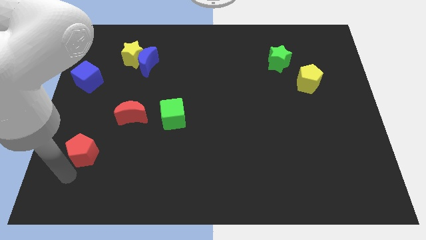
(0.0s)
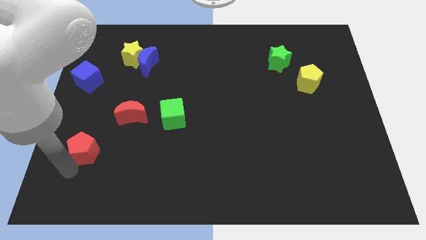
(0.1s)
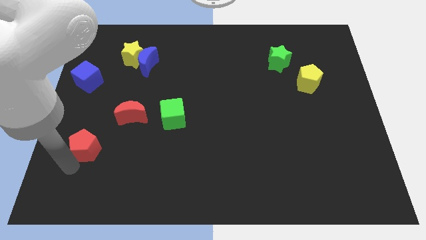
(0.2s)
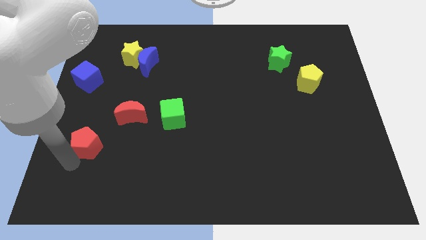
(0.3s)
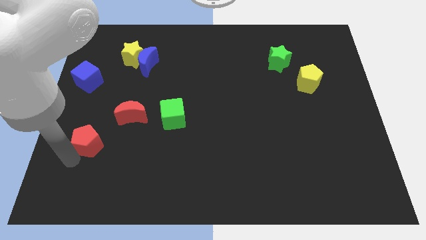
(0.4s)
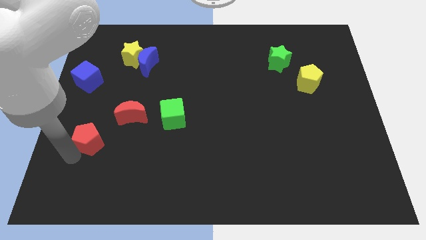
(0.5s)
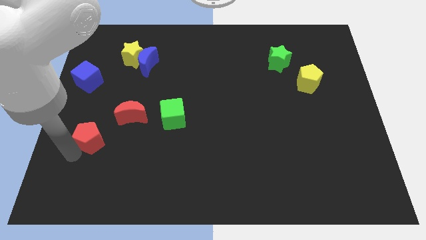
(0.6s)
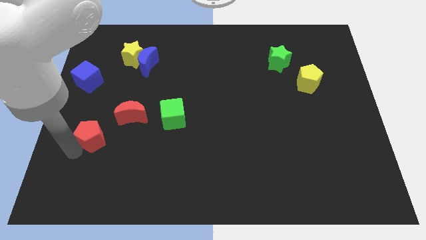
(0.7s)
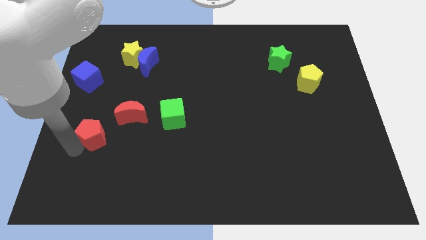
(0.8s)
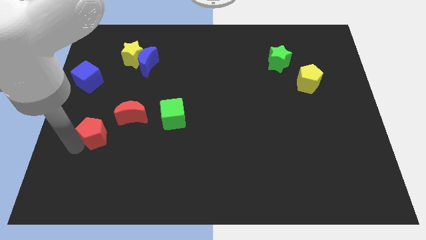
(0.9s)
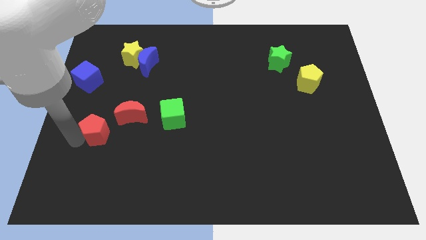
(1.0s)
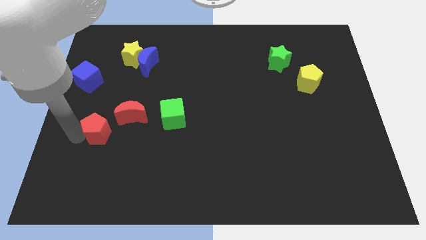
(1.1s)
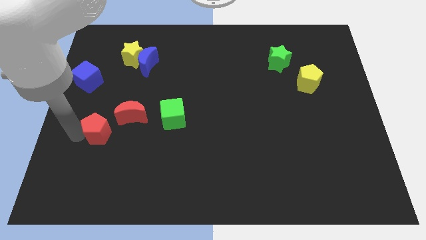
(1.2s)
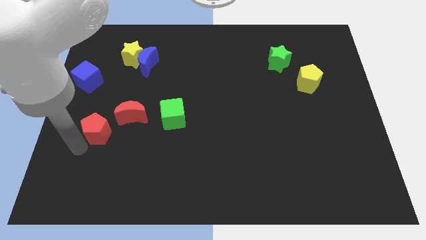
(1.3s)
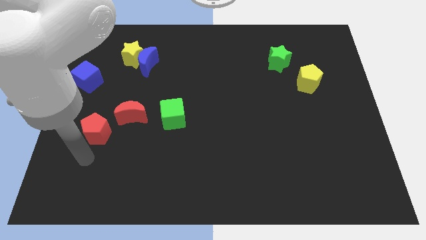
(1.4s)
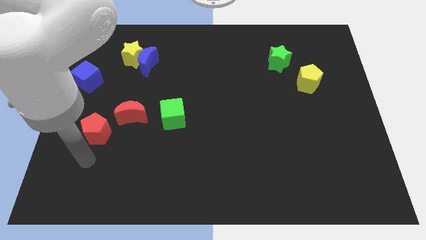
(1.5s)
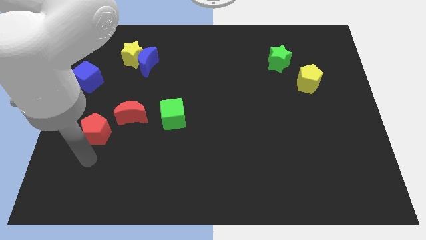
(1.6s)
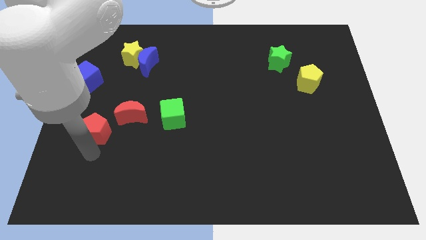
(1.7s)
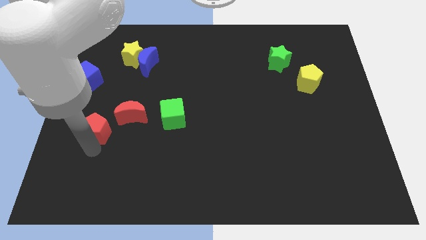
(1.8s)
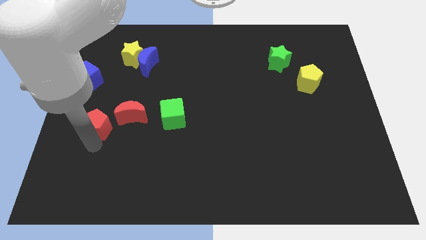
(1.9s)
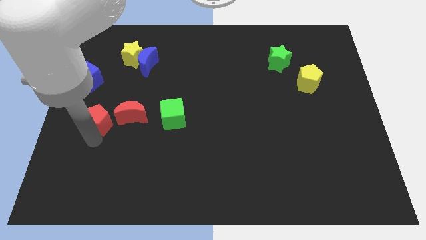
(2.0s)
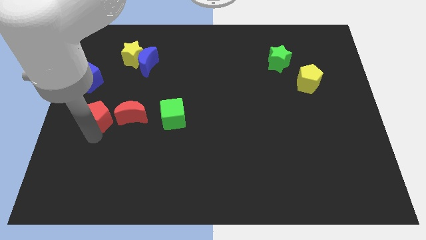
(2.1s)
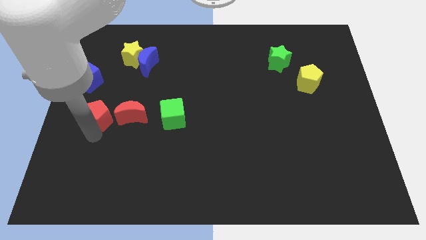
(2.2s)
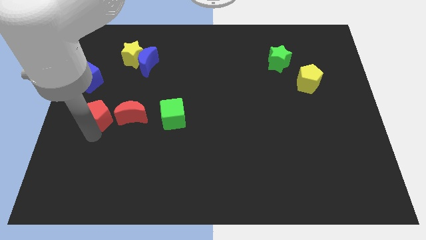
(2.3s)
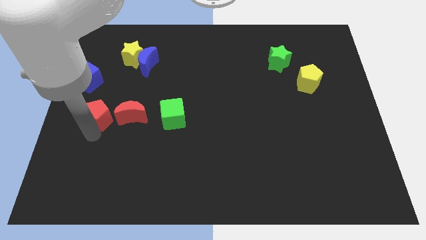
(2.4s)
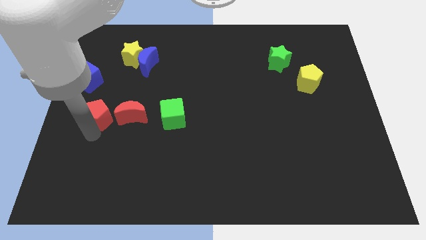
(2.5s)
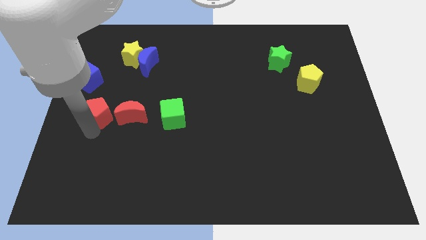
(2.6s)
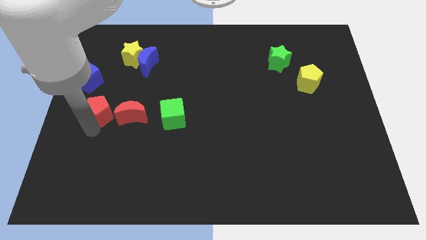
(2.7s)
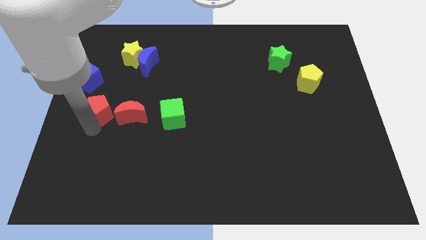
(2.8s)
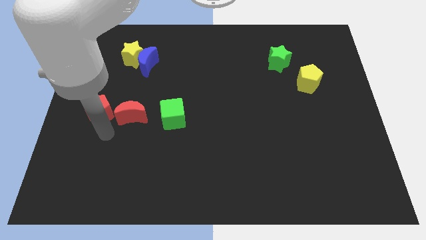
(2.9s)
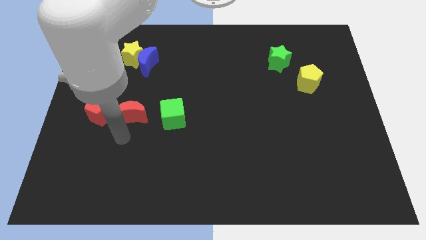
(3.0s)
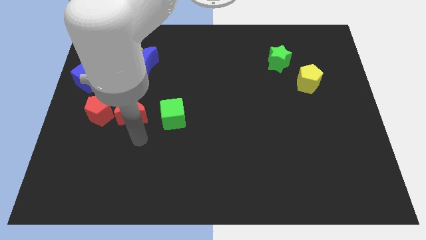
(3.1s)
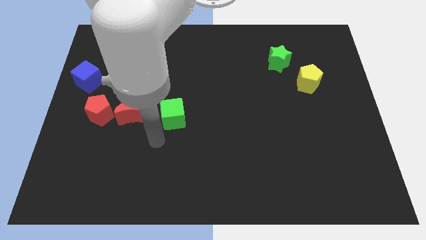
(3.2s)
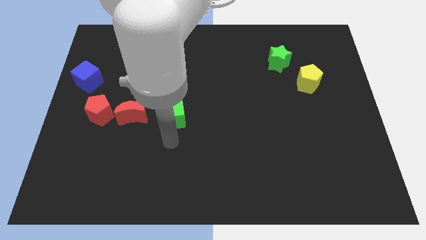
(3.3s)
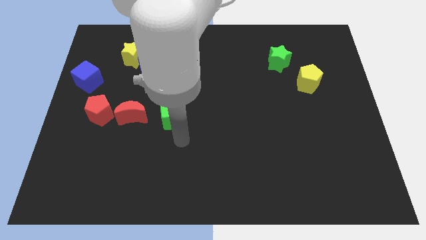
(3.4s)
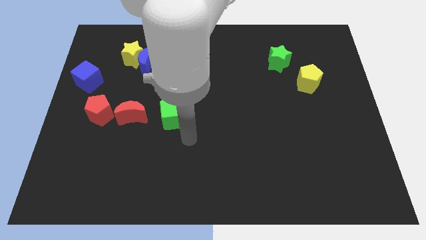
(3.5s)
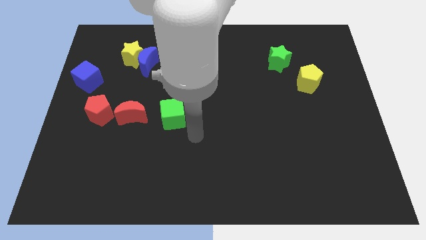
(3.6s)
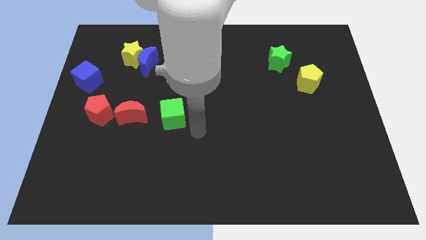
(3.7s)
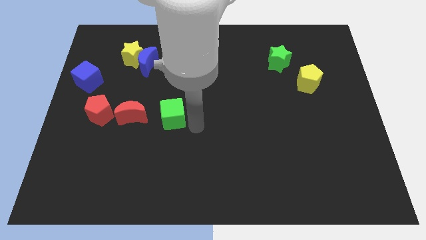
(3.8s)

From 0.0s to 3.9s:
place the red pentagon to the left side of the red crescent

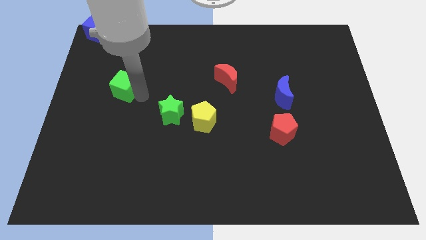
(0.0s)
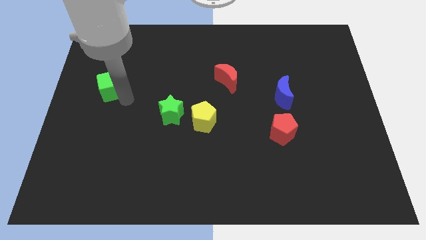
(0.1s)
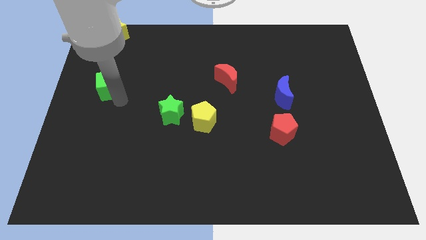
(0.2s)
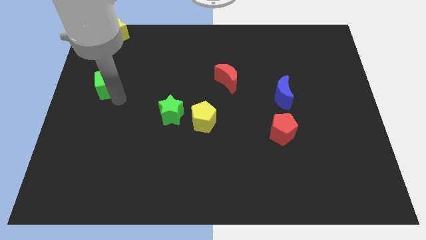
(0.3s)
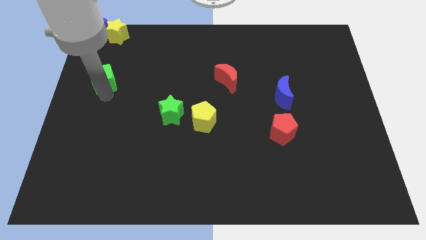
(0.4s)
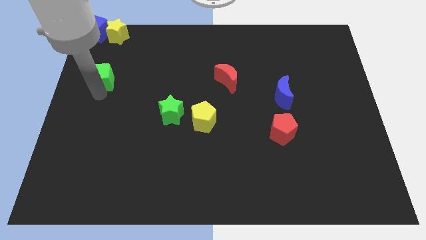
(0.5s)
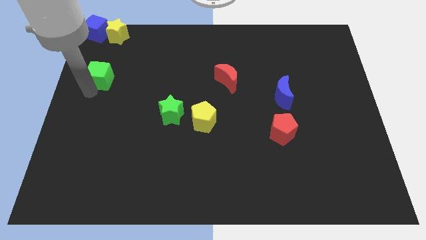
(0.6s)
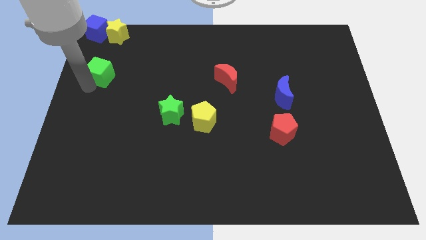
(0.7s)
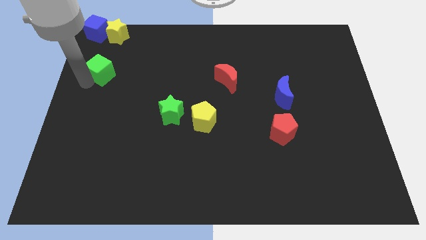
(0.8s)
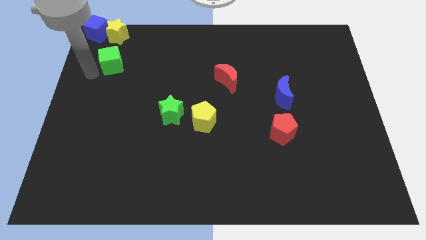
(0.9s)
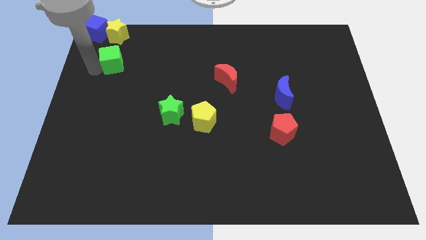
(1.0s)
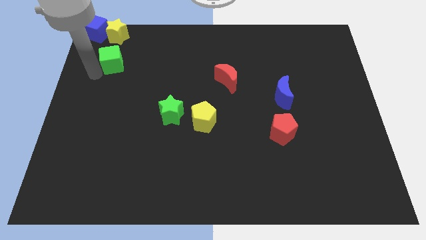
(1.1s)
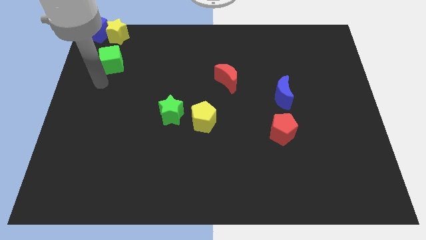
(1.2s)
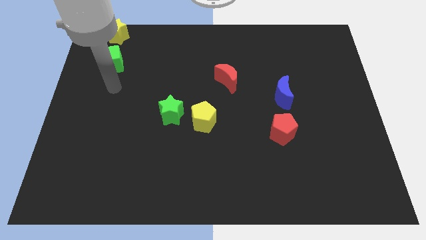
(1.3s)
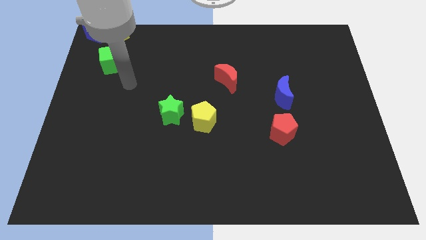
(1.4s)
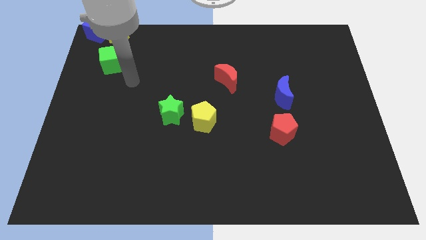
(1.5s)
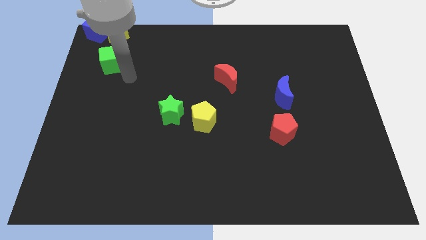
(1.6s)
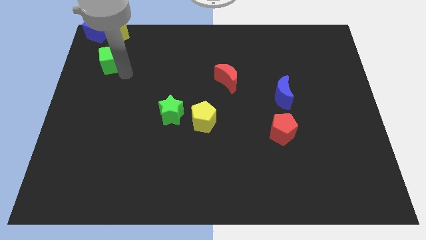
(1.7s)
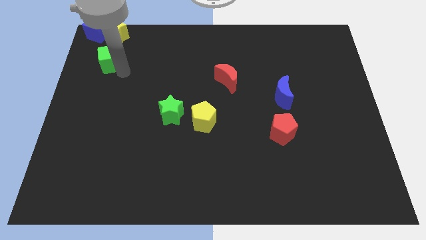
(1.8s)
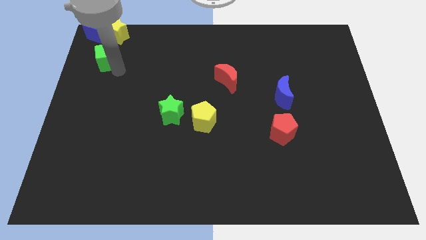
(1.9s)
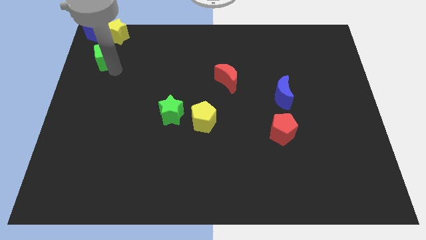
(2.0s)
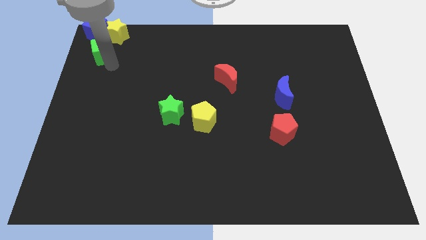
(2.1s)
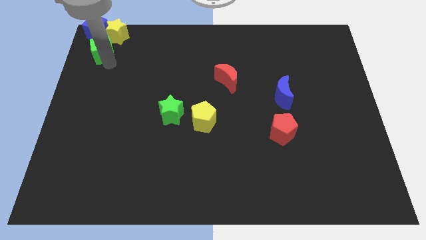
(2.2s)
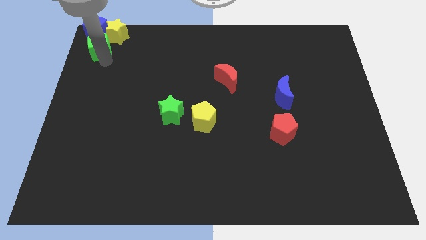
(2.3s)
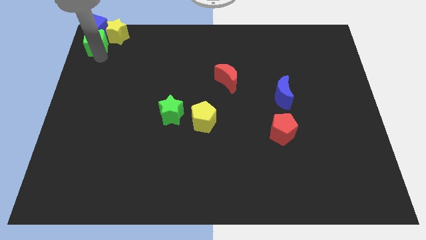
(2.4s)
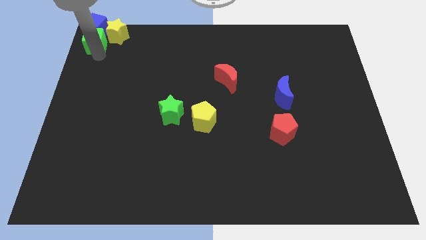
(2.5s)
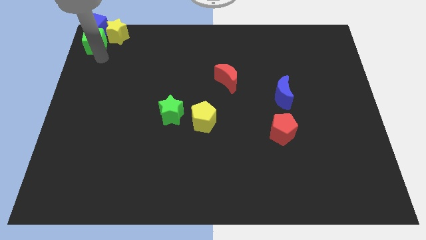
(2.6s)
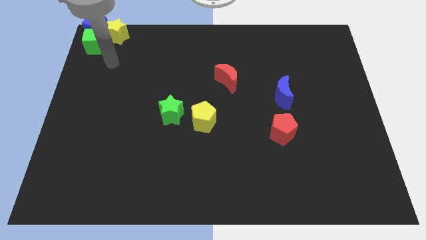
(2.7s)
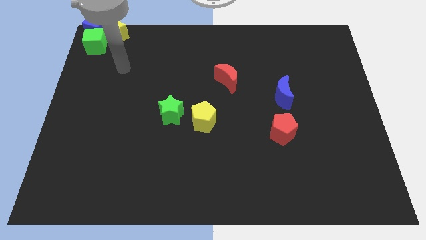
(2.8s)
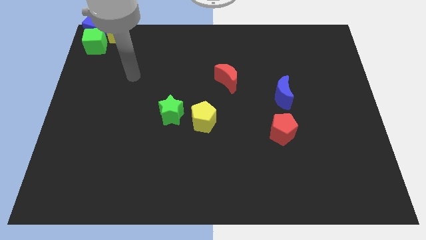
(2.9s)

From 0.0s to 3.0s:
move the green cube below to the blue cube

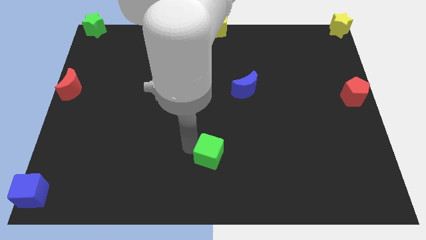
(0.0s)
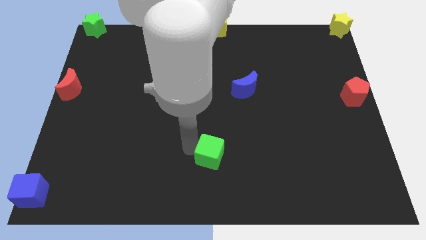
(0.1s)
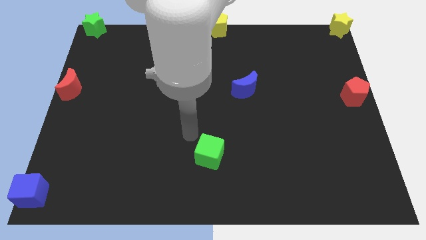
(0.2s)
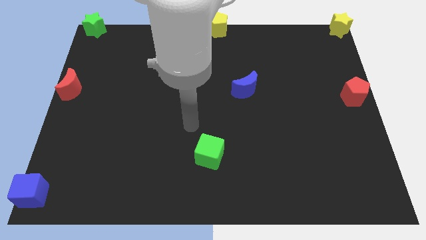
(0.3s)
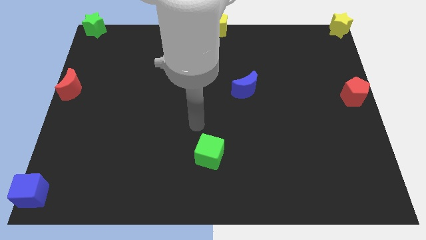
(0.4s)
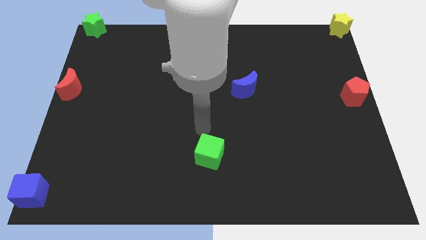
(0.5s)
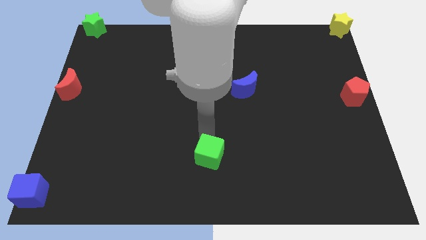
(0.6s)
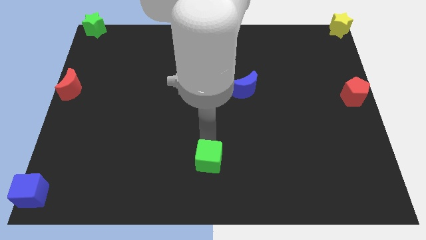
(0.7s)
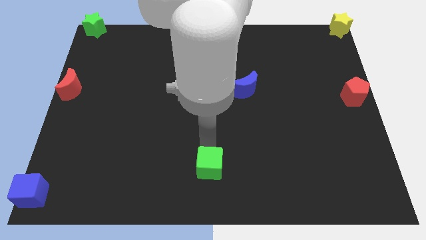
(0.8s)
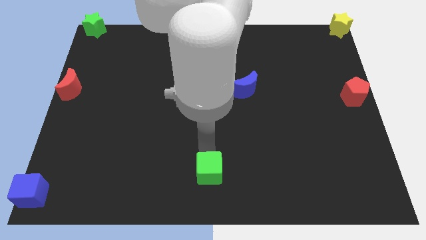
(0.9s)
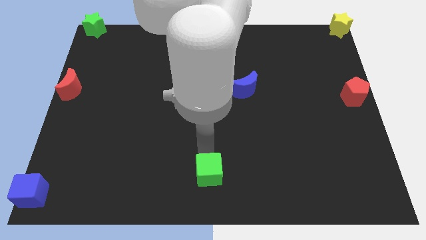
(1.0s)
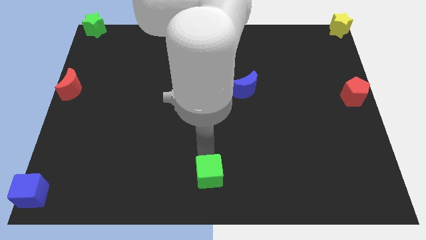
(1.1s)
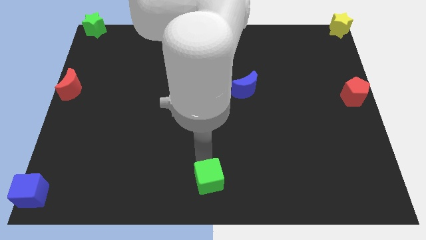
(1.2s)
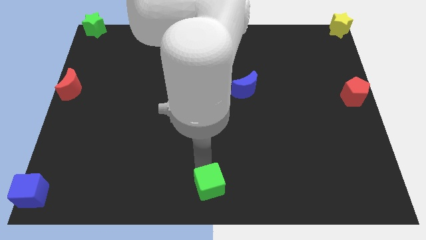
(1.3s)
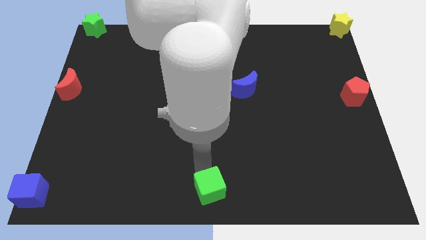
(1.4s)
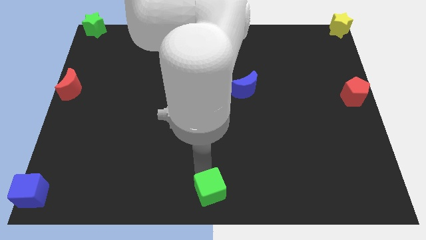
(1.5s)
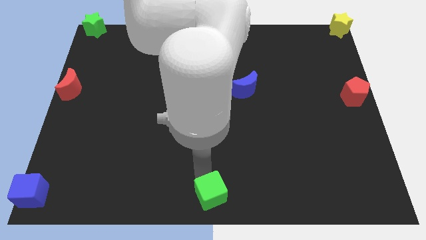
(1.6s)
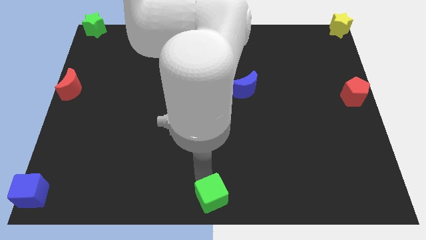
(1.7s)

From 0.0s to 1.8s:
move the green cube to the bottom center of the board

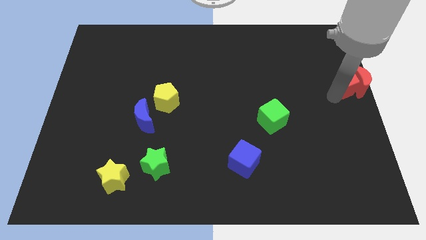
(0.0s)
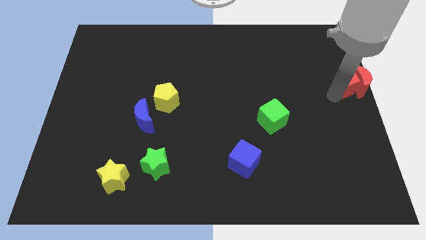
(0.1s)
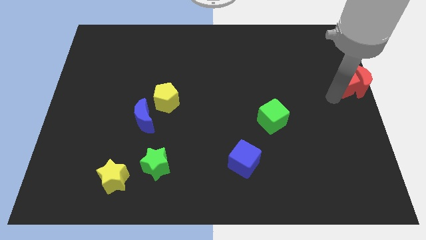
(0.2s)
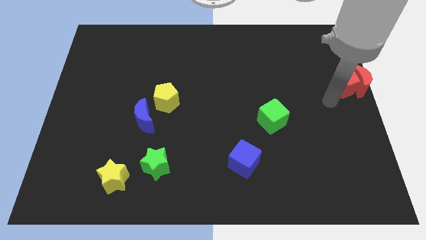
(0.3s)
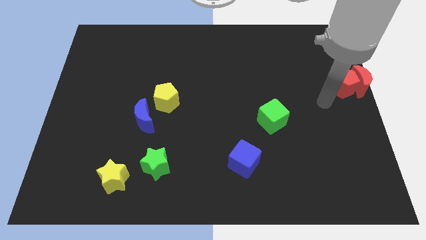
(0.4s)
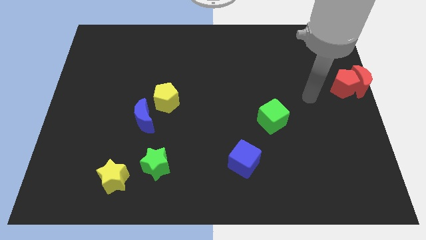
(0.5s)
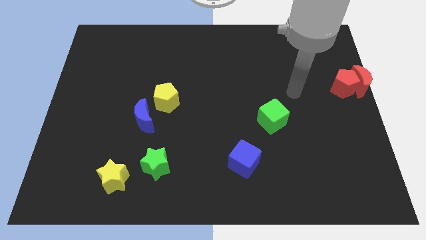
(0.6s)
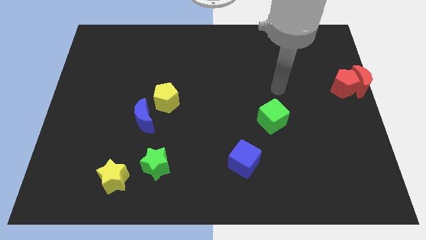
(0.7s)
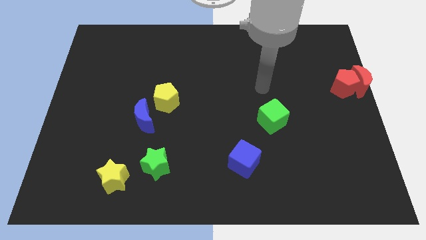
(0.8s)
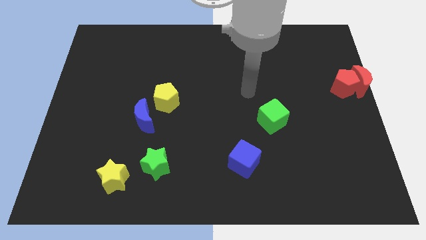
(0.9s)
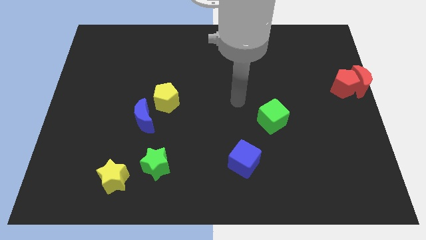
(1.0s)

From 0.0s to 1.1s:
move your arm away from red pentagon
